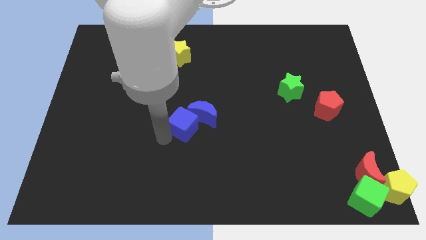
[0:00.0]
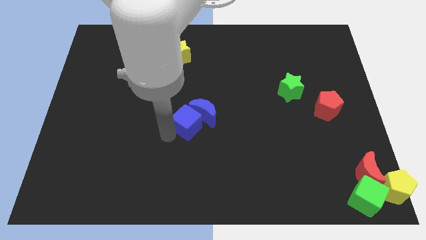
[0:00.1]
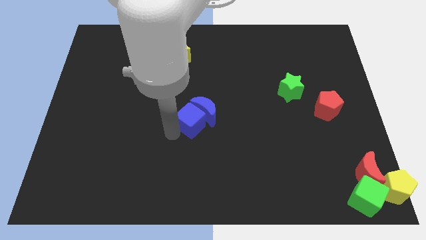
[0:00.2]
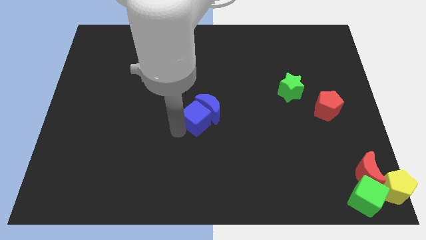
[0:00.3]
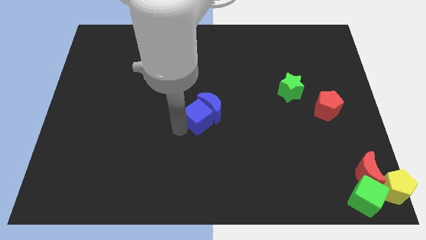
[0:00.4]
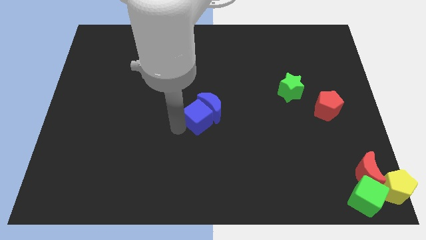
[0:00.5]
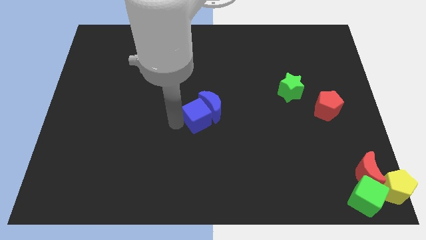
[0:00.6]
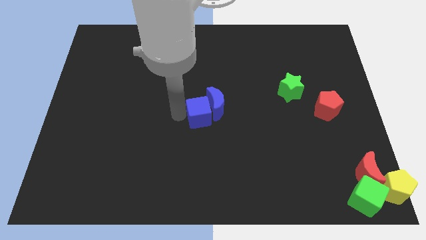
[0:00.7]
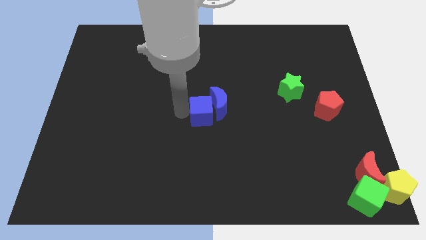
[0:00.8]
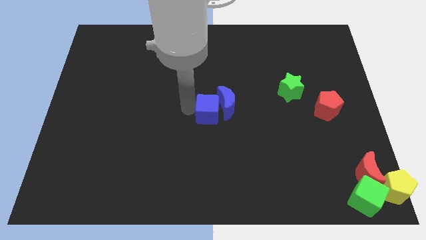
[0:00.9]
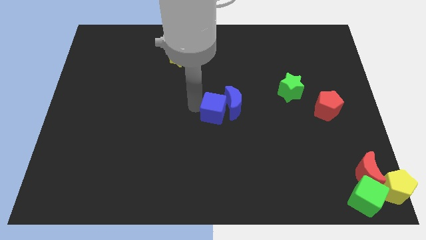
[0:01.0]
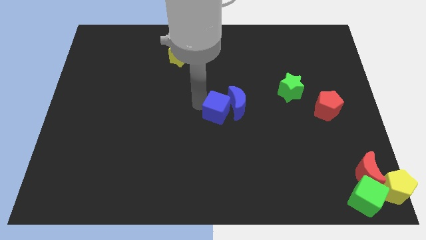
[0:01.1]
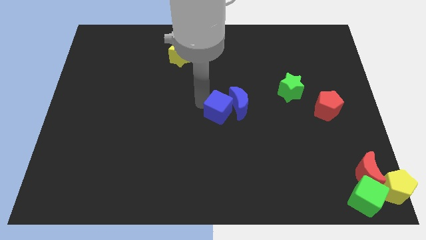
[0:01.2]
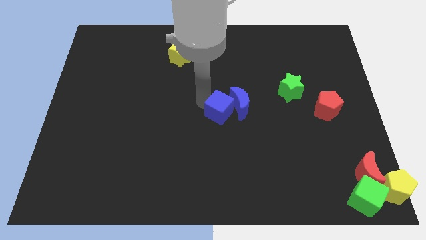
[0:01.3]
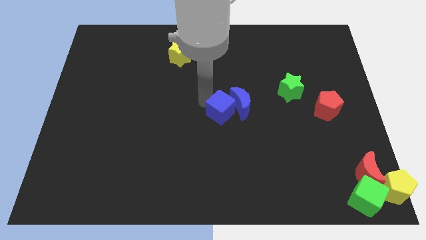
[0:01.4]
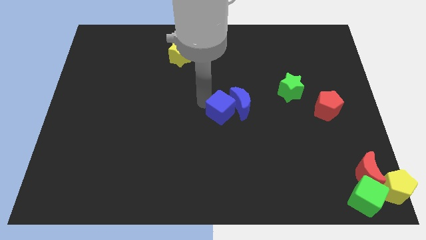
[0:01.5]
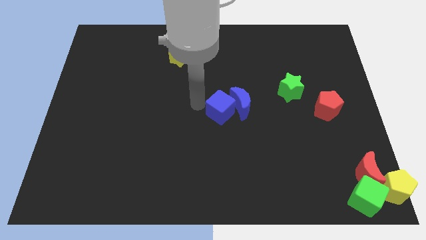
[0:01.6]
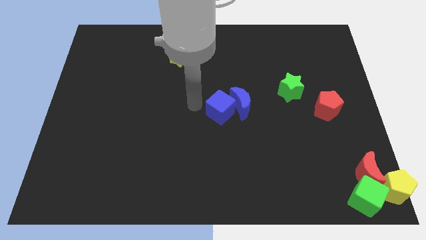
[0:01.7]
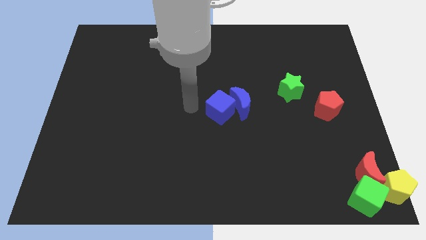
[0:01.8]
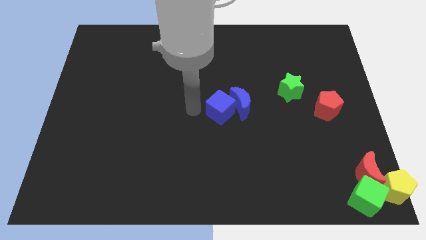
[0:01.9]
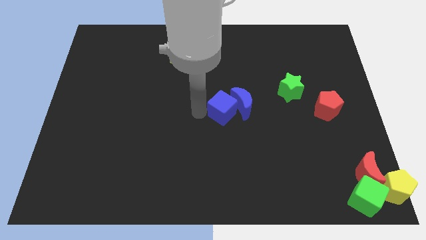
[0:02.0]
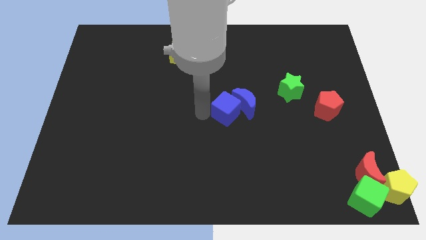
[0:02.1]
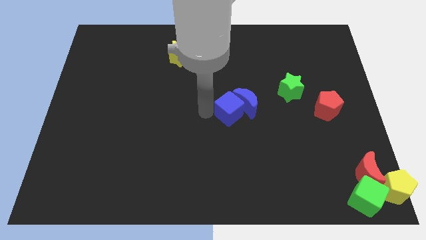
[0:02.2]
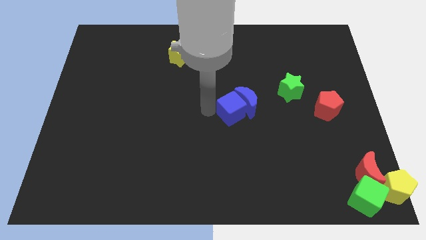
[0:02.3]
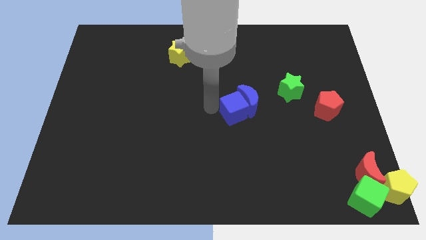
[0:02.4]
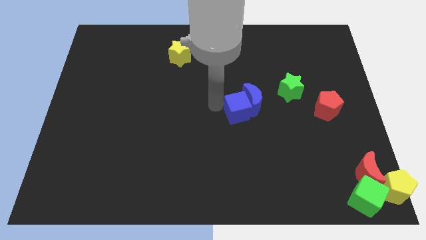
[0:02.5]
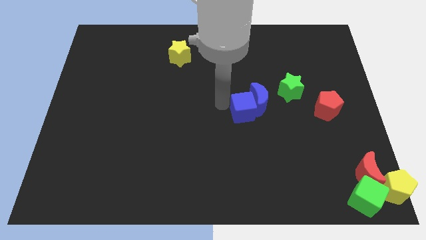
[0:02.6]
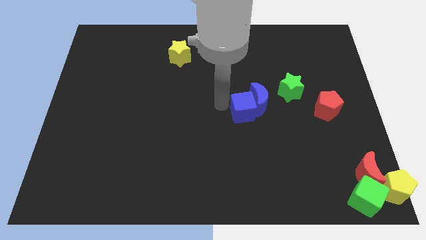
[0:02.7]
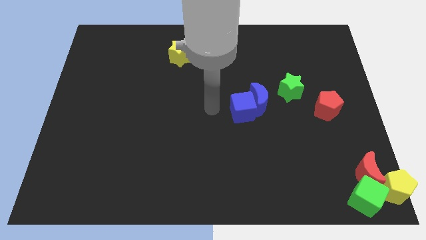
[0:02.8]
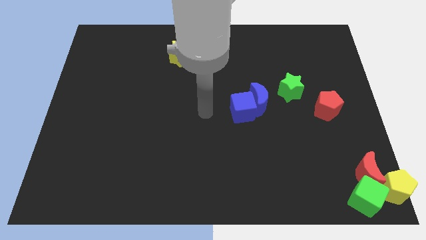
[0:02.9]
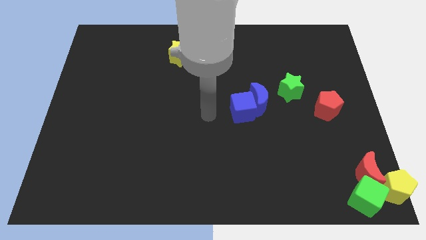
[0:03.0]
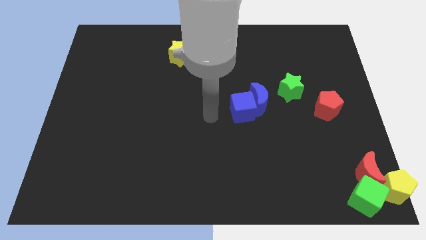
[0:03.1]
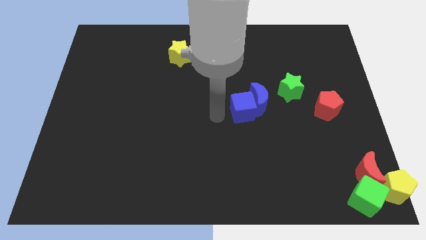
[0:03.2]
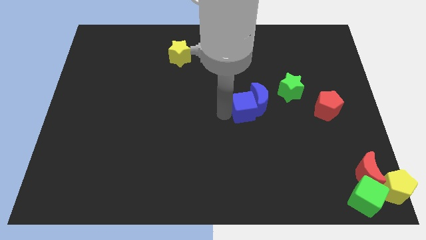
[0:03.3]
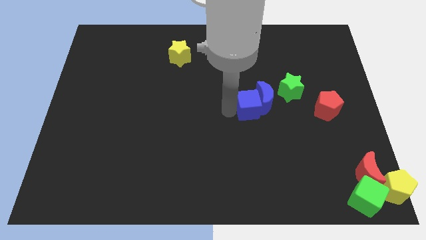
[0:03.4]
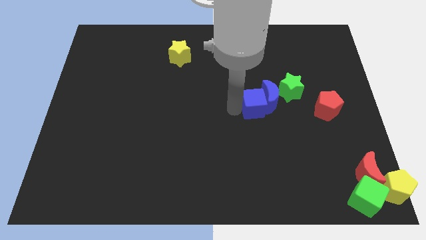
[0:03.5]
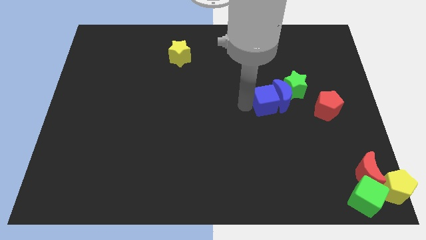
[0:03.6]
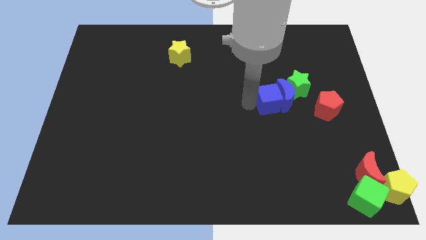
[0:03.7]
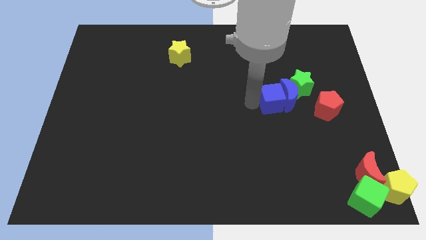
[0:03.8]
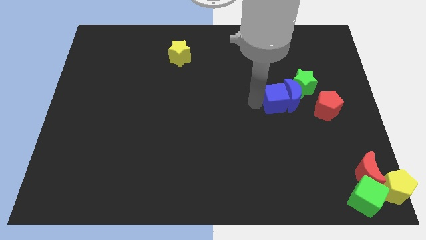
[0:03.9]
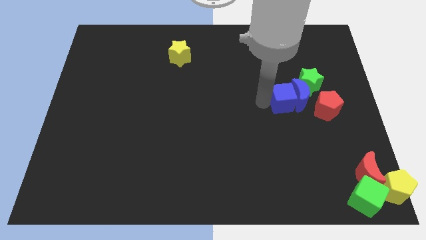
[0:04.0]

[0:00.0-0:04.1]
move the blue cube along with blue crescent into the green star

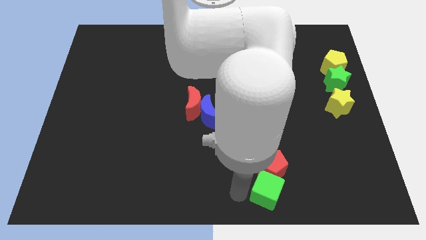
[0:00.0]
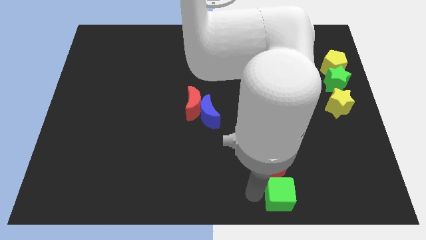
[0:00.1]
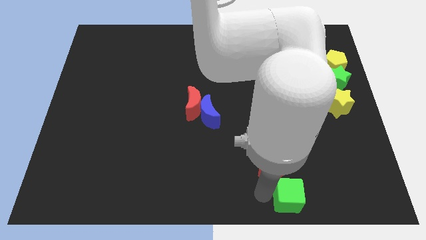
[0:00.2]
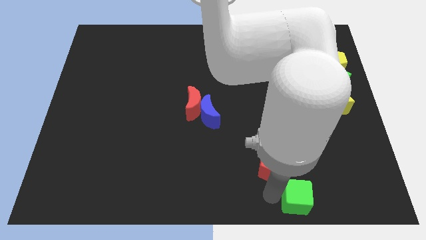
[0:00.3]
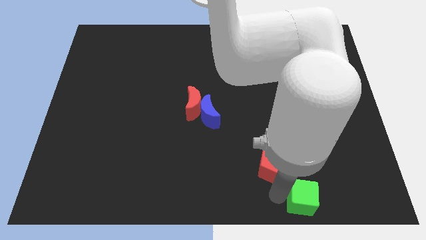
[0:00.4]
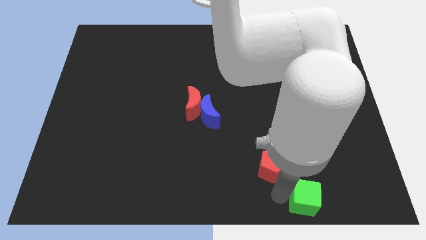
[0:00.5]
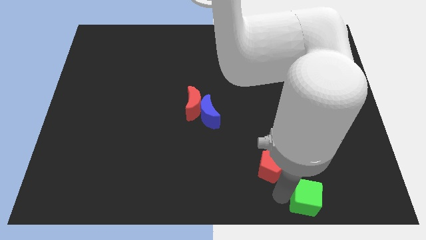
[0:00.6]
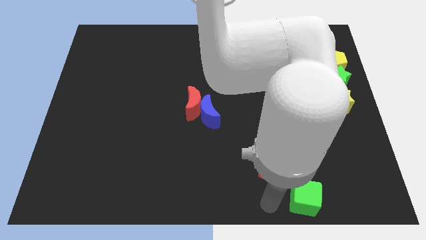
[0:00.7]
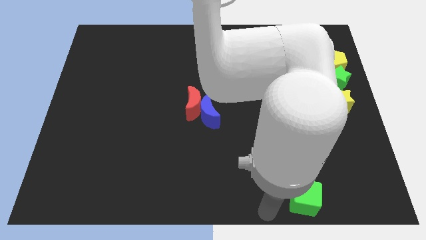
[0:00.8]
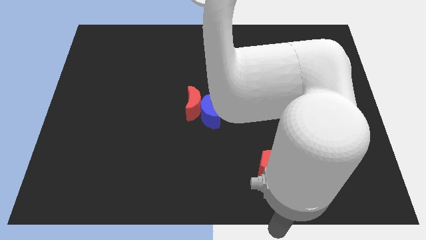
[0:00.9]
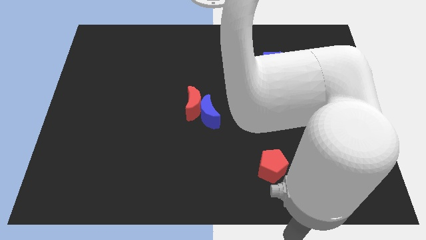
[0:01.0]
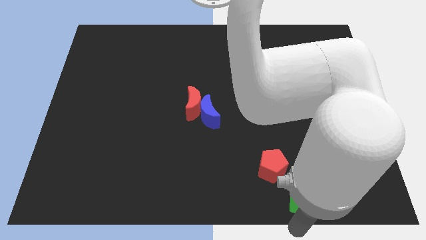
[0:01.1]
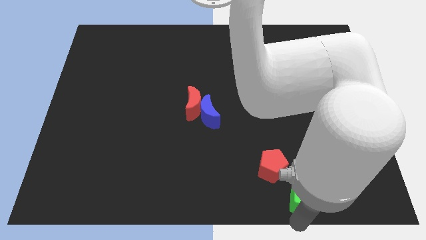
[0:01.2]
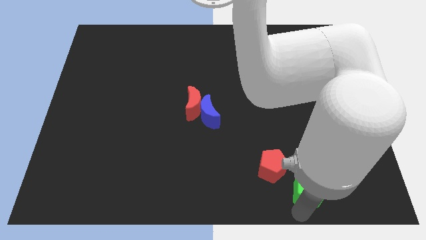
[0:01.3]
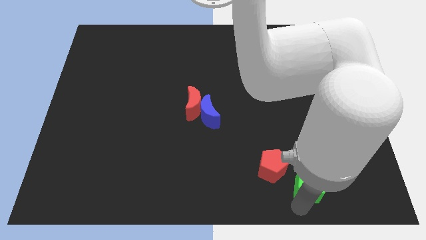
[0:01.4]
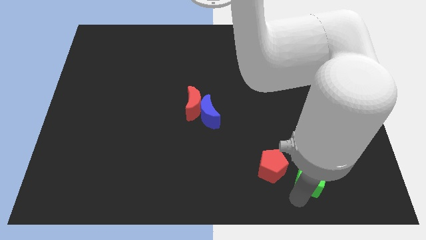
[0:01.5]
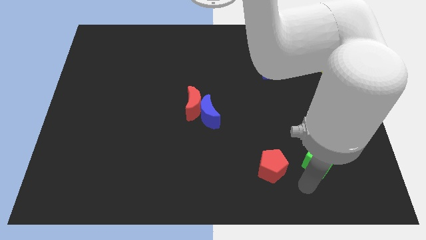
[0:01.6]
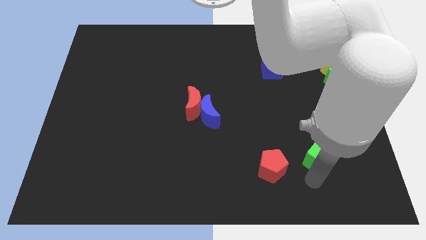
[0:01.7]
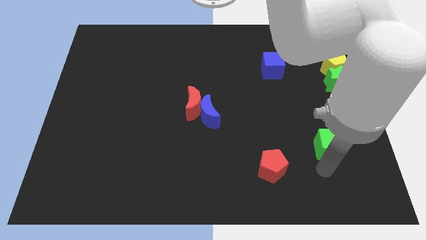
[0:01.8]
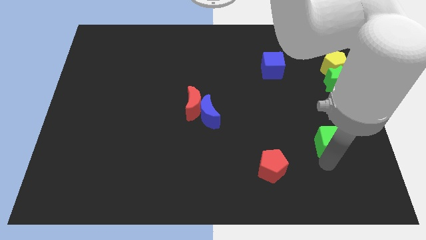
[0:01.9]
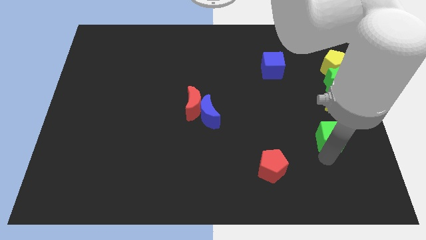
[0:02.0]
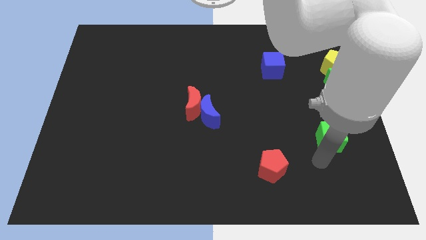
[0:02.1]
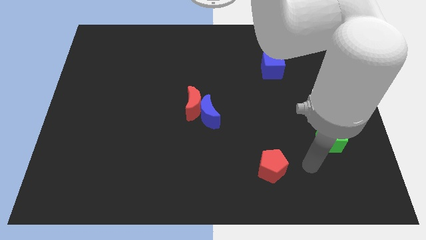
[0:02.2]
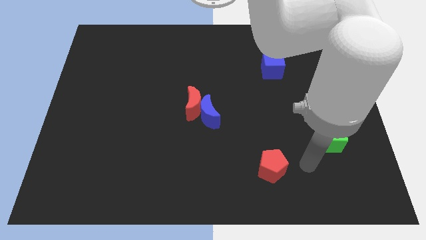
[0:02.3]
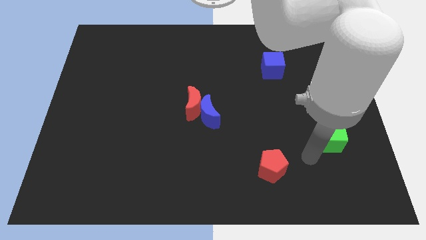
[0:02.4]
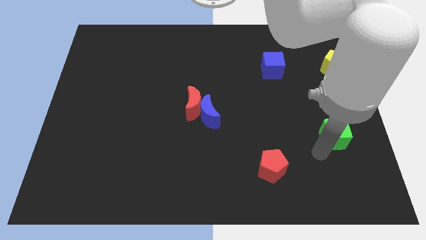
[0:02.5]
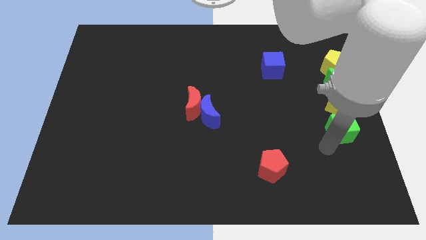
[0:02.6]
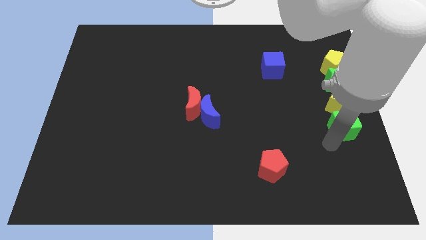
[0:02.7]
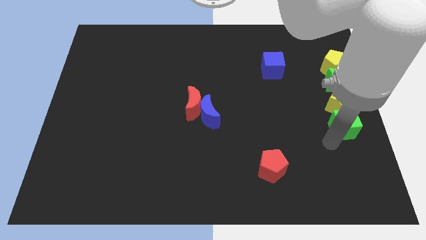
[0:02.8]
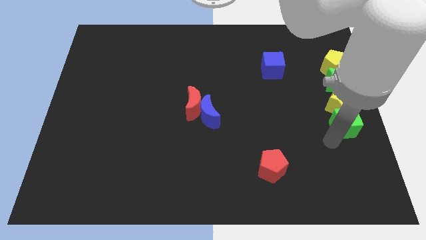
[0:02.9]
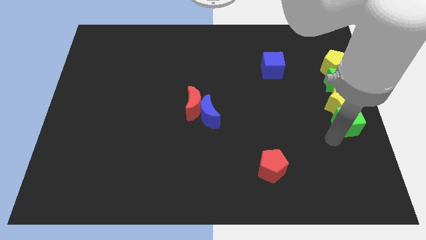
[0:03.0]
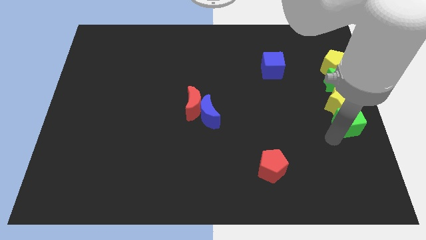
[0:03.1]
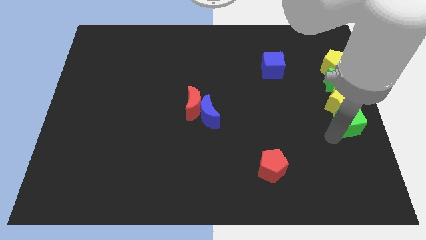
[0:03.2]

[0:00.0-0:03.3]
push thte green cube into the bottom side of the yellow star

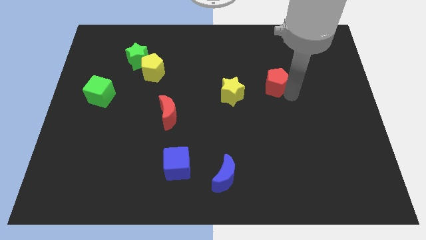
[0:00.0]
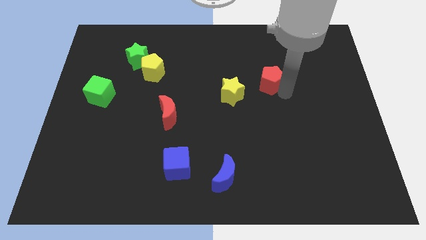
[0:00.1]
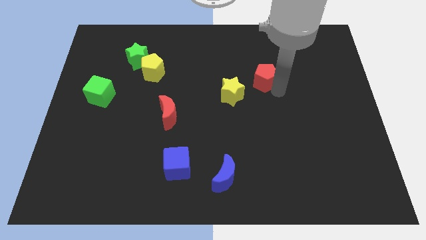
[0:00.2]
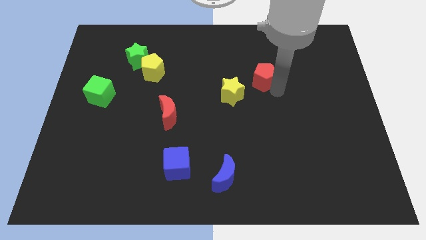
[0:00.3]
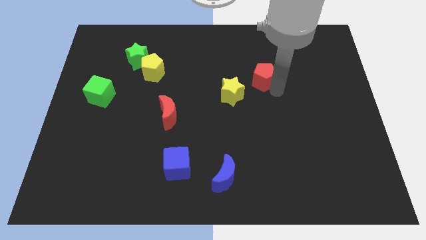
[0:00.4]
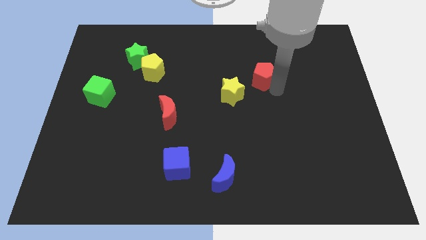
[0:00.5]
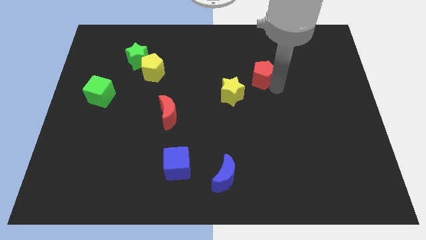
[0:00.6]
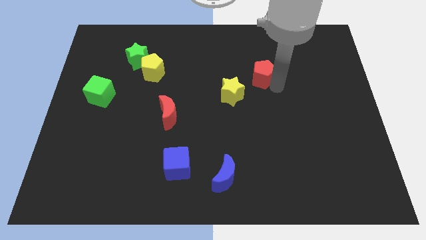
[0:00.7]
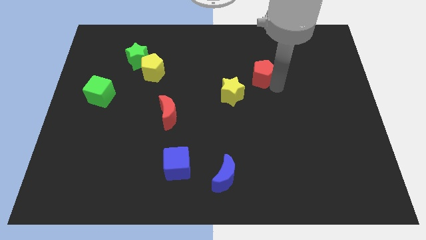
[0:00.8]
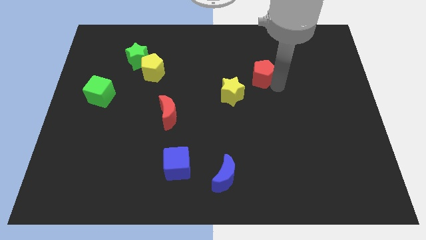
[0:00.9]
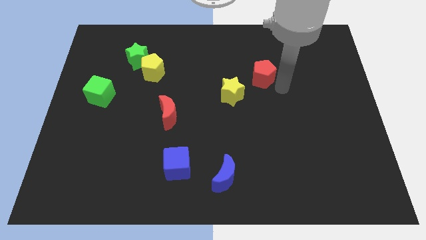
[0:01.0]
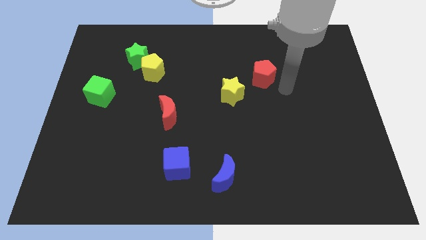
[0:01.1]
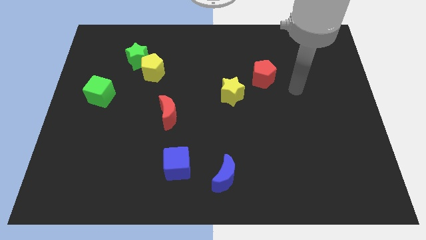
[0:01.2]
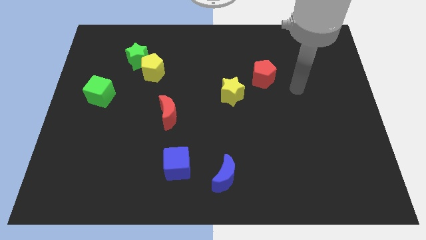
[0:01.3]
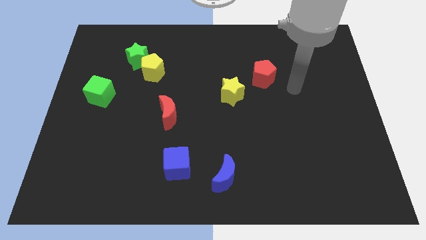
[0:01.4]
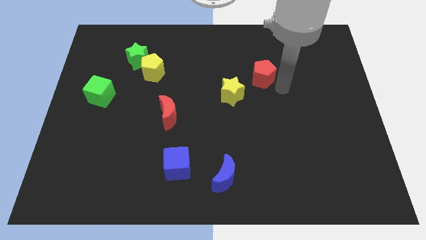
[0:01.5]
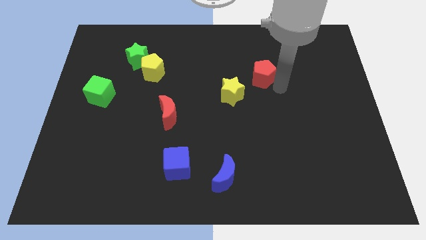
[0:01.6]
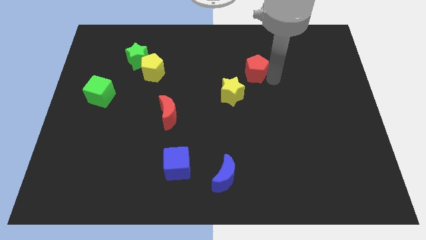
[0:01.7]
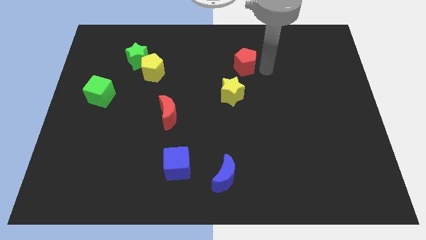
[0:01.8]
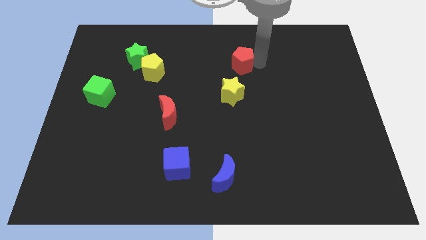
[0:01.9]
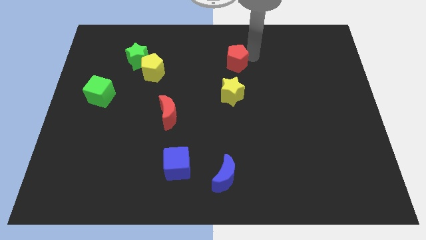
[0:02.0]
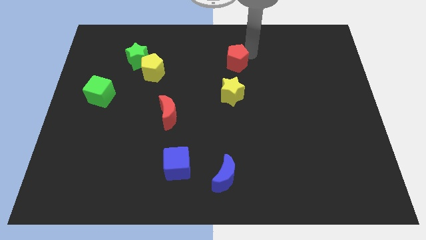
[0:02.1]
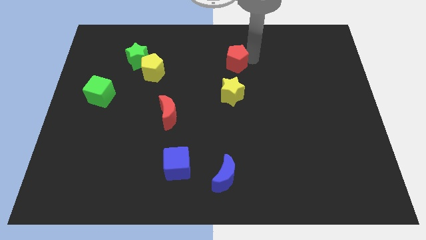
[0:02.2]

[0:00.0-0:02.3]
move the red pentagon to the top of the yellow star
